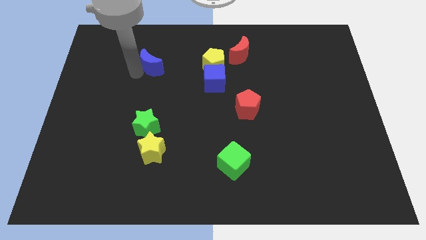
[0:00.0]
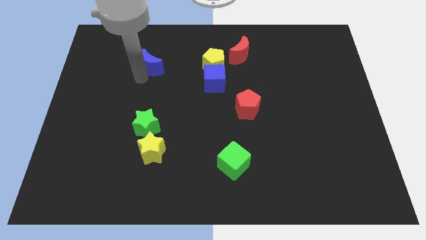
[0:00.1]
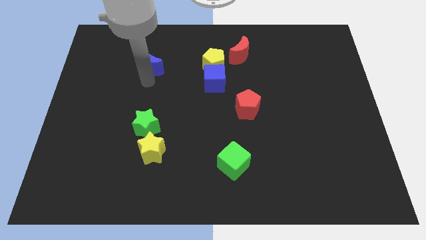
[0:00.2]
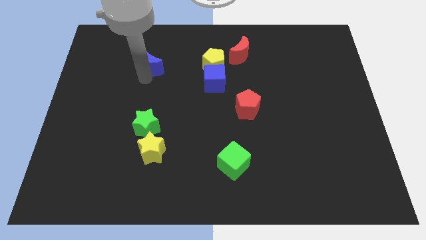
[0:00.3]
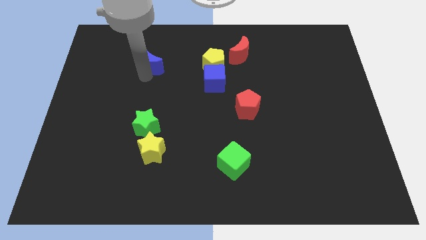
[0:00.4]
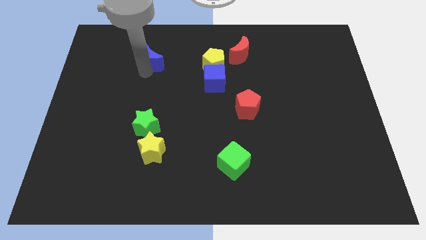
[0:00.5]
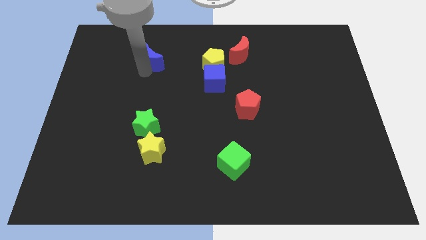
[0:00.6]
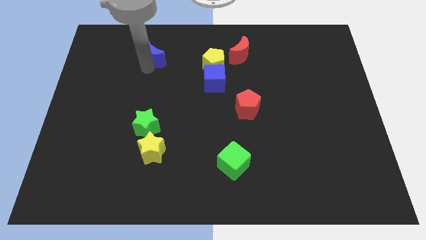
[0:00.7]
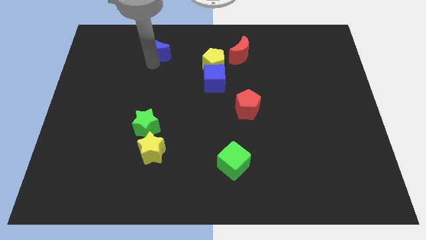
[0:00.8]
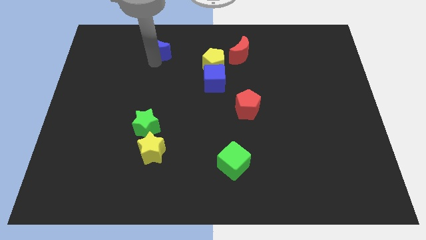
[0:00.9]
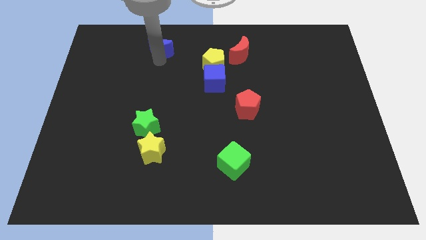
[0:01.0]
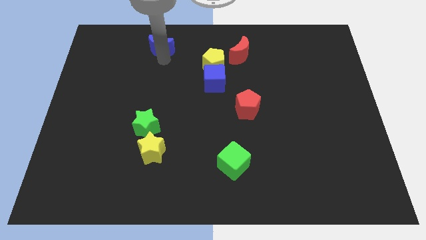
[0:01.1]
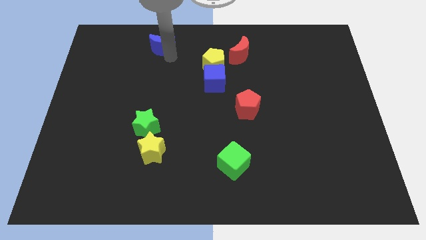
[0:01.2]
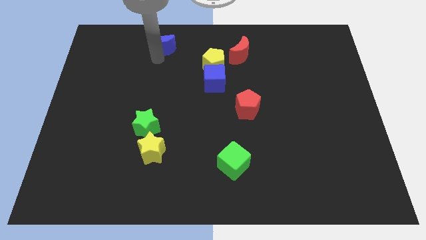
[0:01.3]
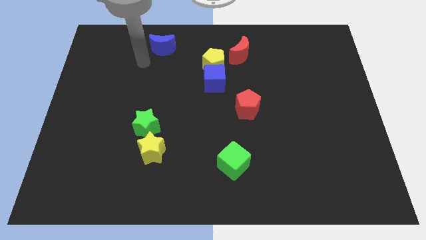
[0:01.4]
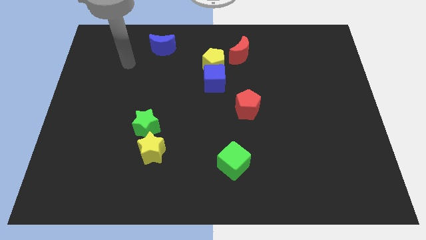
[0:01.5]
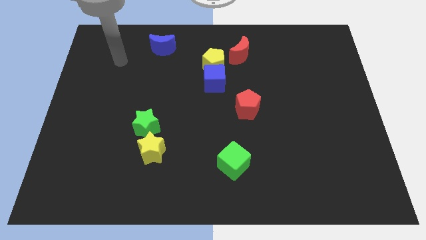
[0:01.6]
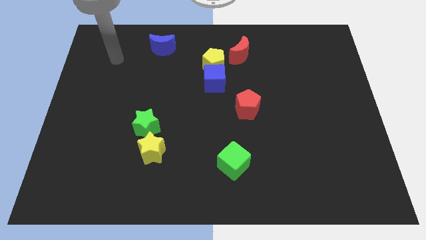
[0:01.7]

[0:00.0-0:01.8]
place the blue moon vertical above green star

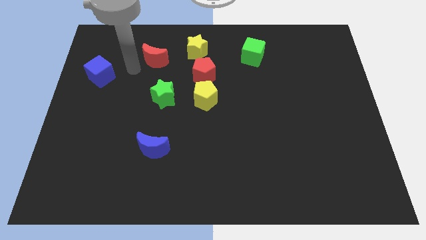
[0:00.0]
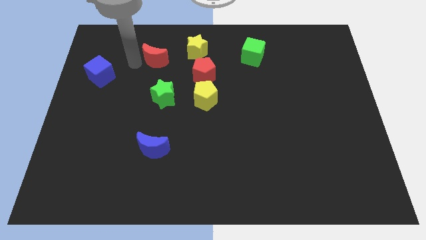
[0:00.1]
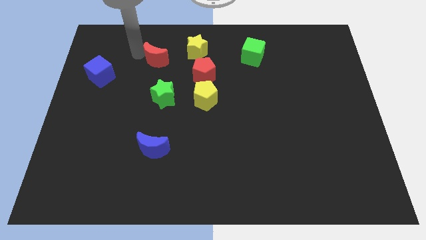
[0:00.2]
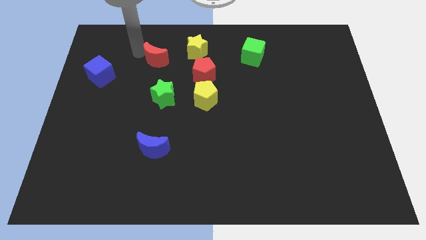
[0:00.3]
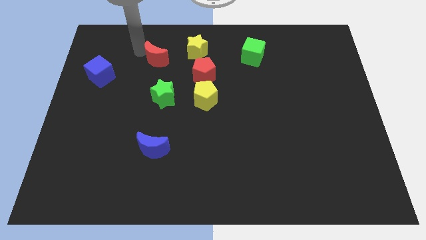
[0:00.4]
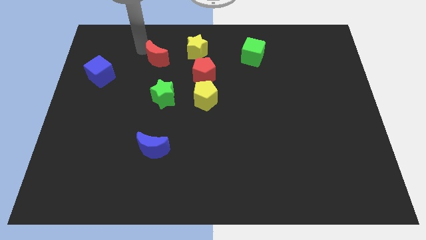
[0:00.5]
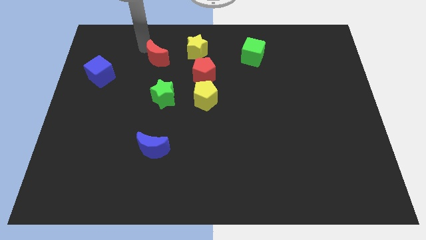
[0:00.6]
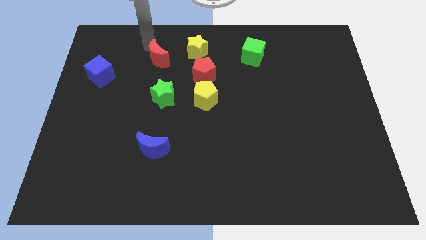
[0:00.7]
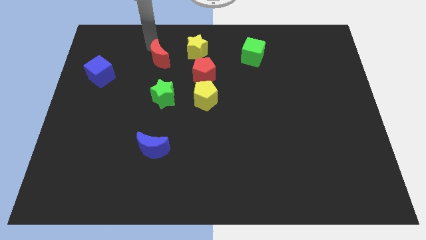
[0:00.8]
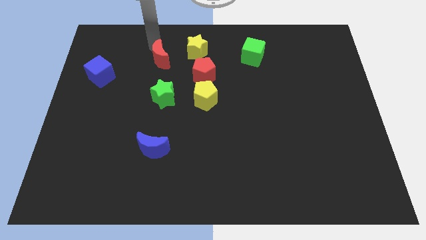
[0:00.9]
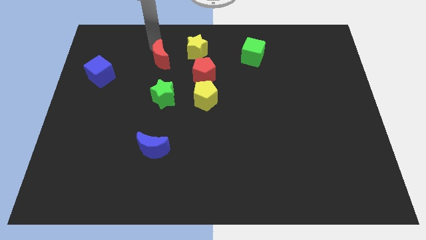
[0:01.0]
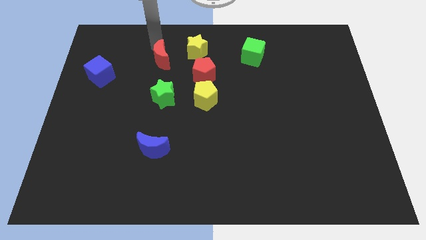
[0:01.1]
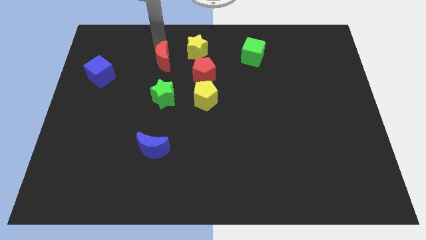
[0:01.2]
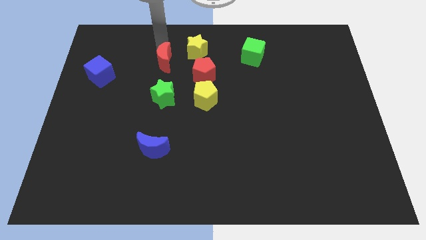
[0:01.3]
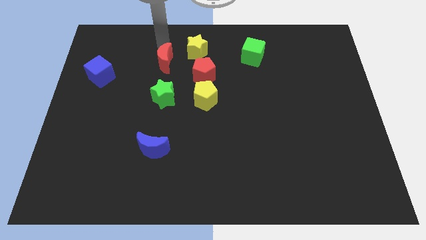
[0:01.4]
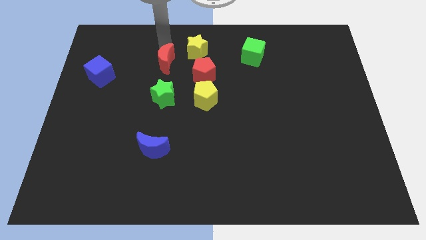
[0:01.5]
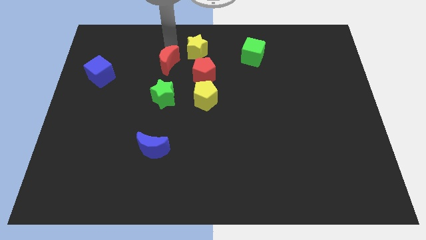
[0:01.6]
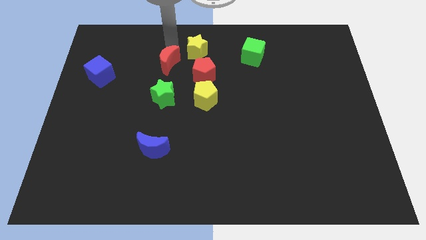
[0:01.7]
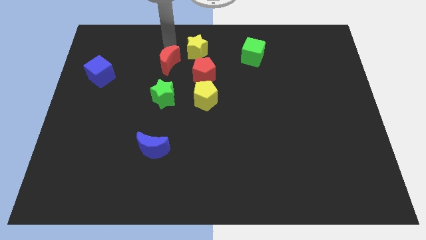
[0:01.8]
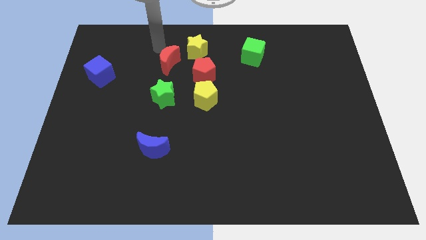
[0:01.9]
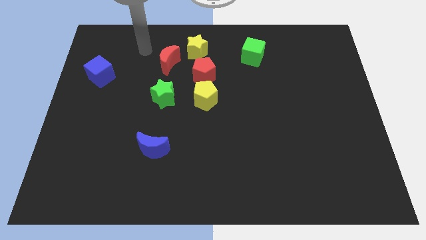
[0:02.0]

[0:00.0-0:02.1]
turn the red crescent above the green star

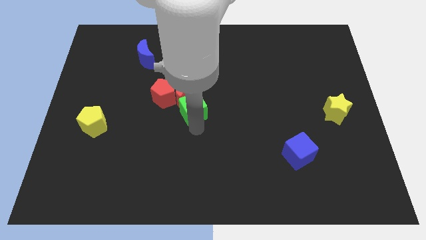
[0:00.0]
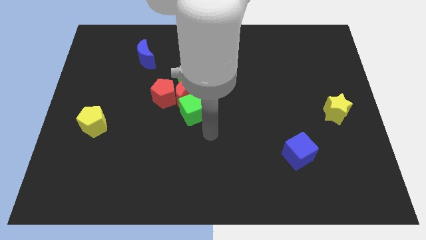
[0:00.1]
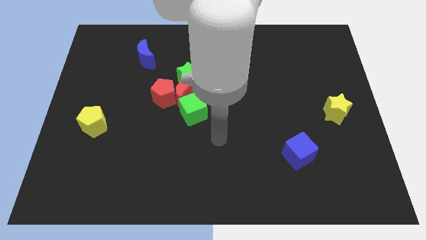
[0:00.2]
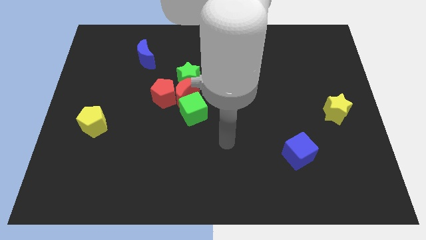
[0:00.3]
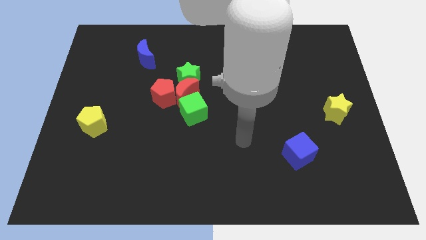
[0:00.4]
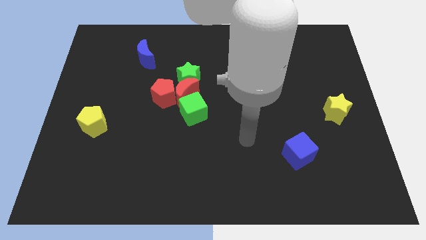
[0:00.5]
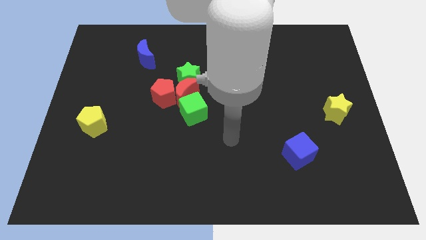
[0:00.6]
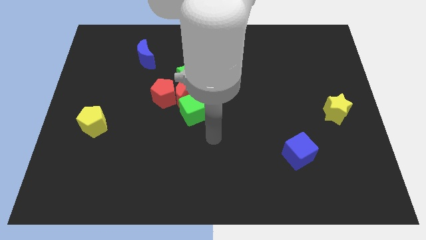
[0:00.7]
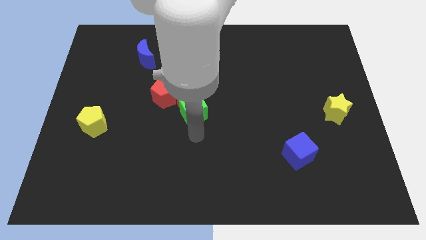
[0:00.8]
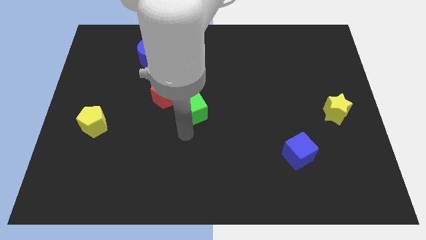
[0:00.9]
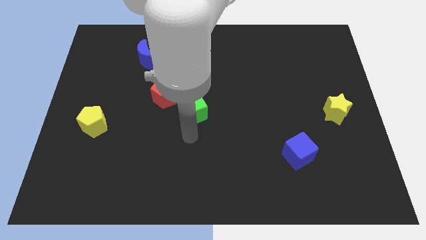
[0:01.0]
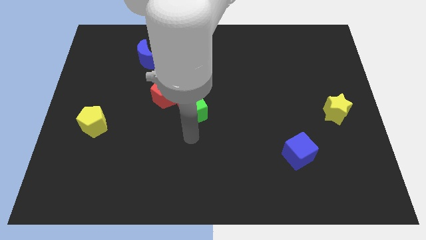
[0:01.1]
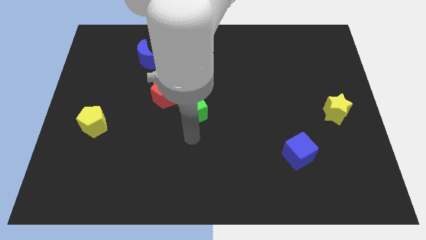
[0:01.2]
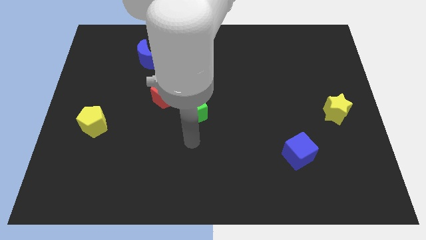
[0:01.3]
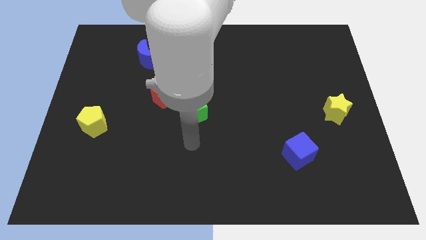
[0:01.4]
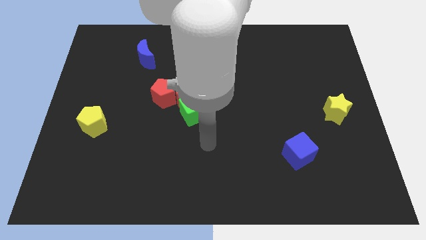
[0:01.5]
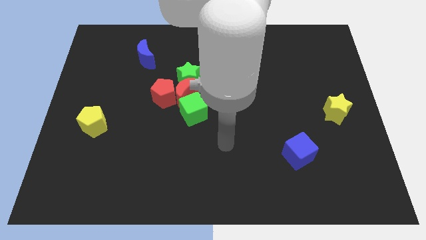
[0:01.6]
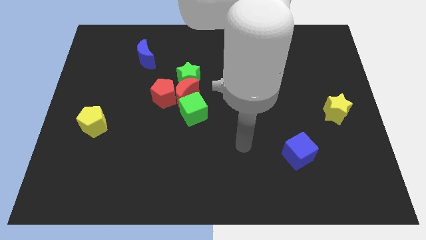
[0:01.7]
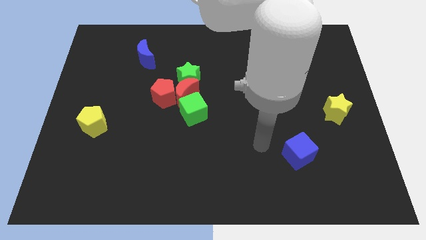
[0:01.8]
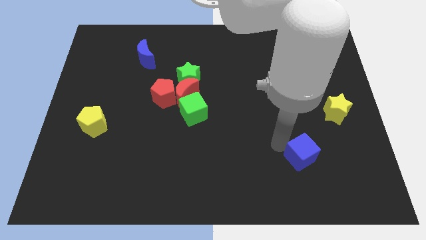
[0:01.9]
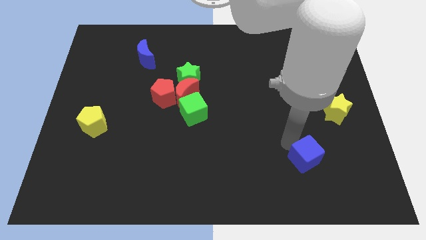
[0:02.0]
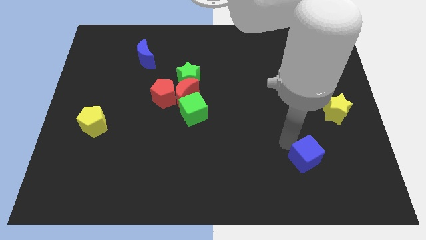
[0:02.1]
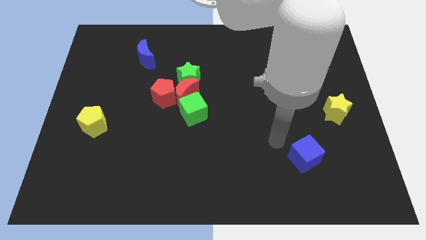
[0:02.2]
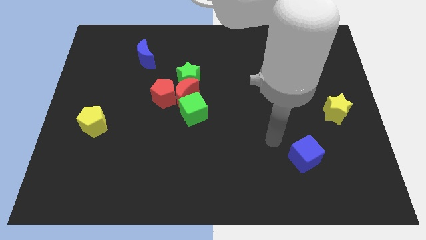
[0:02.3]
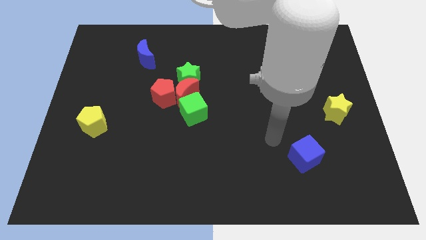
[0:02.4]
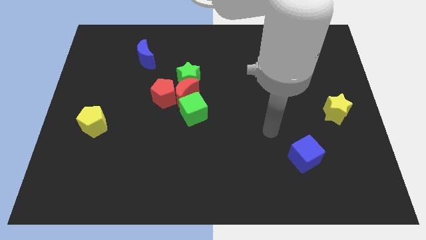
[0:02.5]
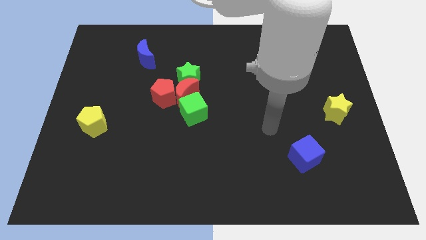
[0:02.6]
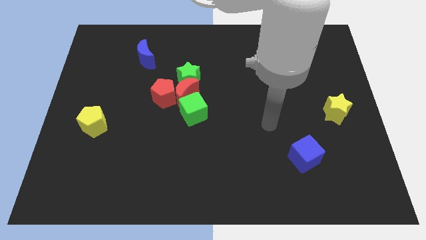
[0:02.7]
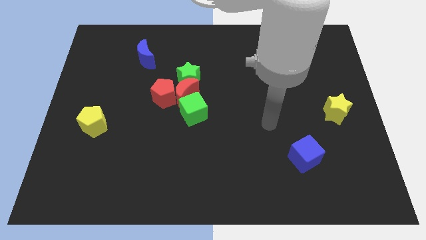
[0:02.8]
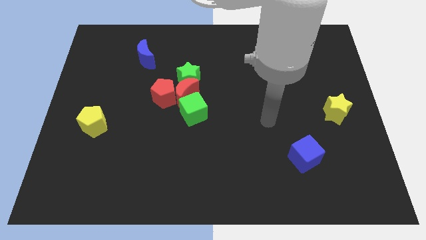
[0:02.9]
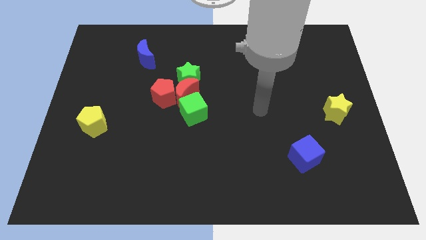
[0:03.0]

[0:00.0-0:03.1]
push arm in between blue cube and yellow star

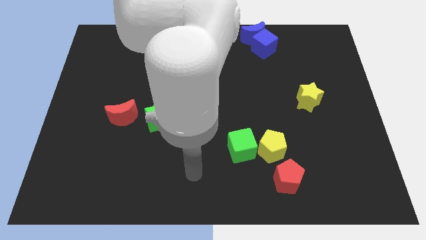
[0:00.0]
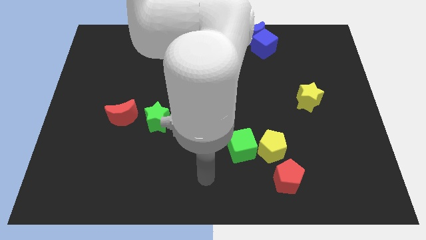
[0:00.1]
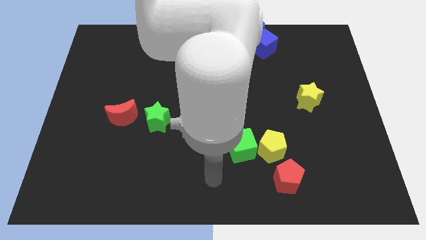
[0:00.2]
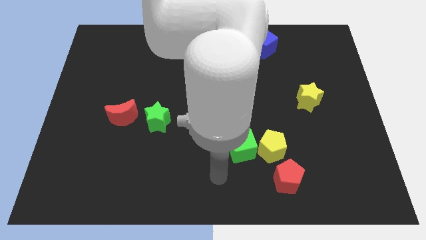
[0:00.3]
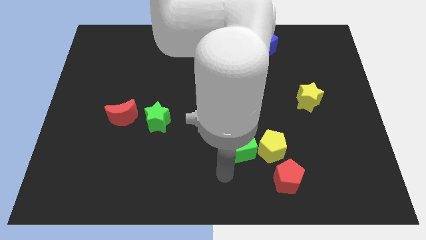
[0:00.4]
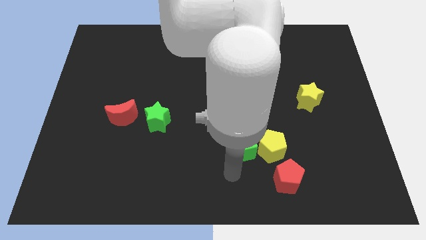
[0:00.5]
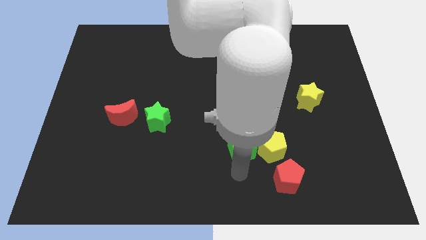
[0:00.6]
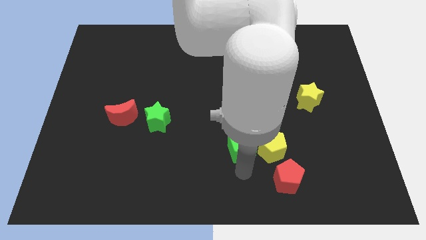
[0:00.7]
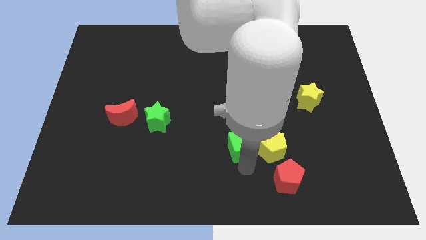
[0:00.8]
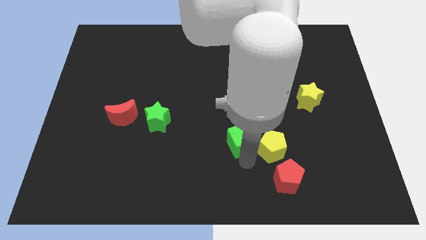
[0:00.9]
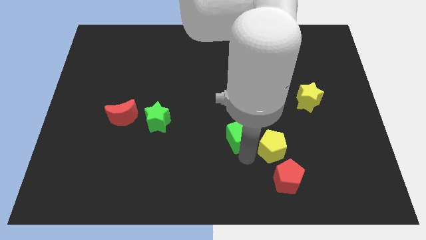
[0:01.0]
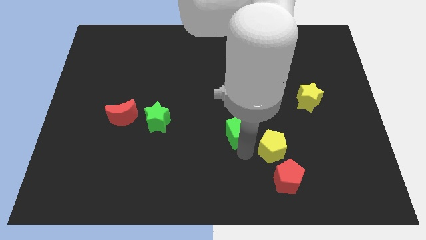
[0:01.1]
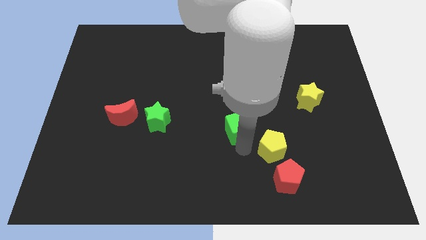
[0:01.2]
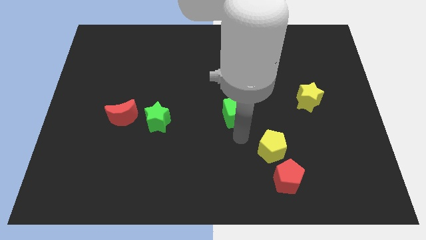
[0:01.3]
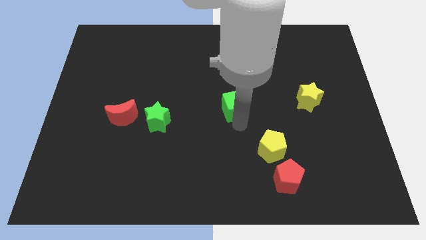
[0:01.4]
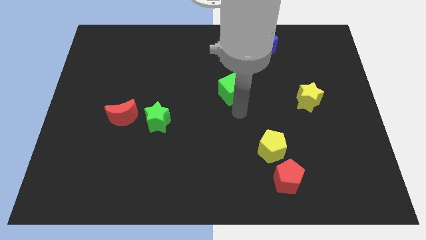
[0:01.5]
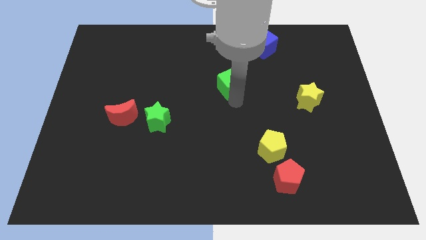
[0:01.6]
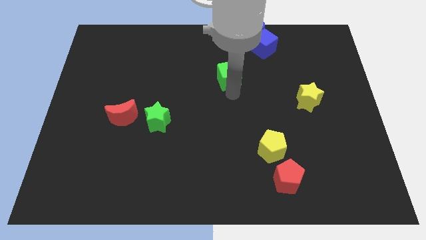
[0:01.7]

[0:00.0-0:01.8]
separate green cube from the yellow pentagon

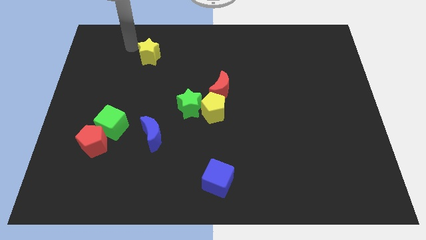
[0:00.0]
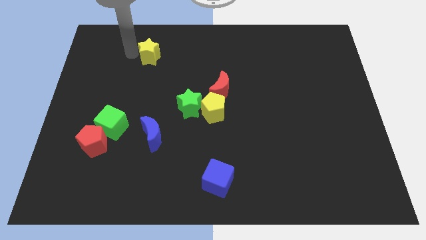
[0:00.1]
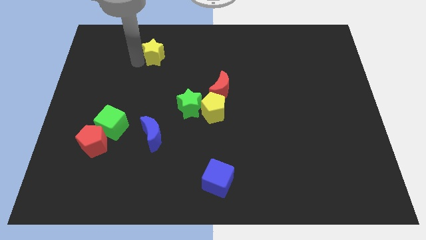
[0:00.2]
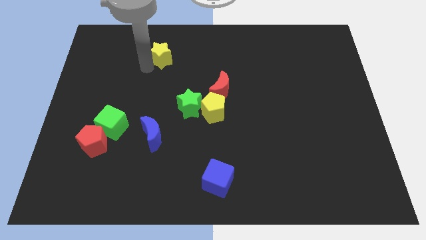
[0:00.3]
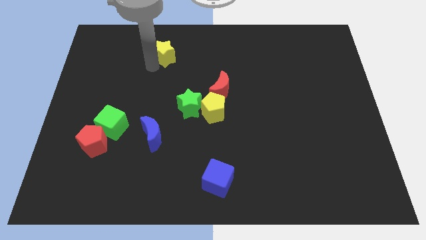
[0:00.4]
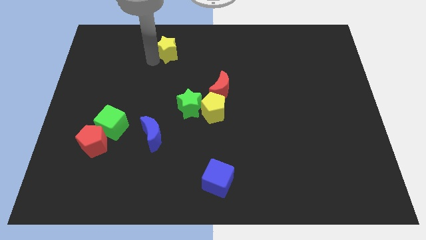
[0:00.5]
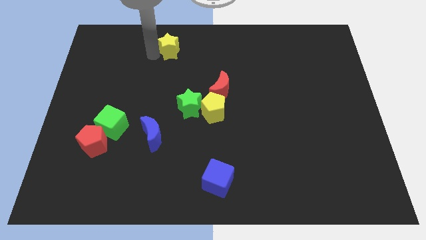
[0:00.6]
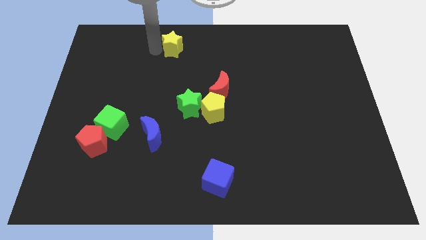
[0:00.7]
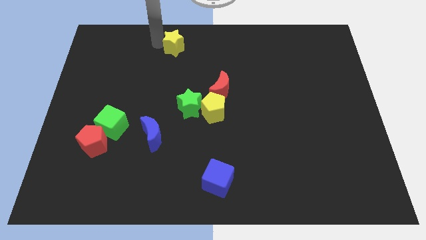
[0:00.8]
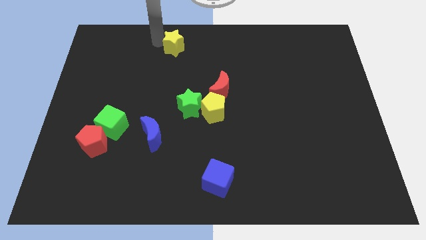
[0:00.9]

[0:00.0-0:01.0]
push the yellow star towards the top center of the board
